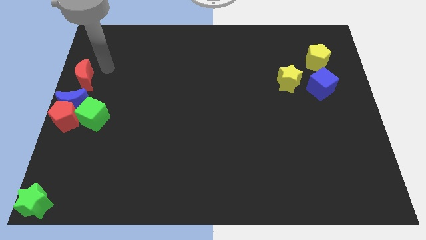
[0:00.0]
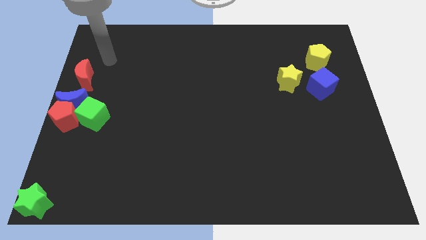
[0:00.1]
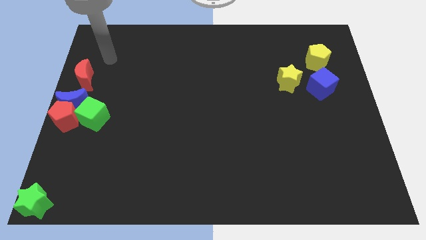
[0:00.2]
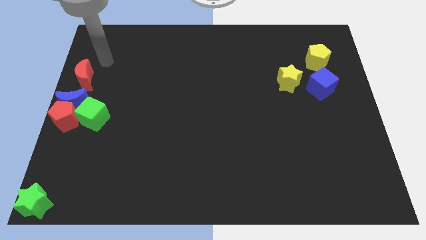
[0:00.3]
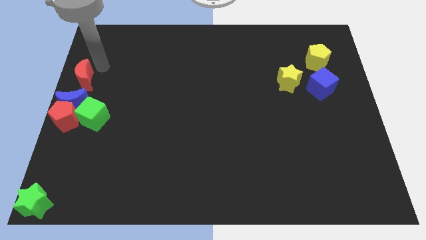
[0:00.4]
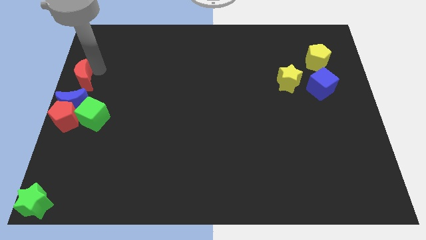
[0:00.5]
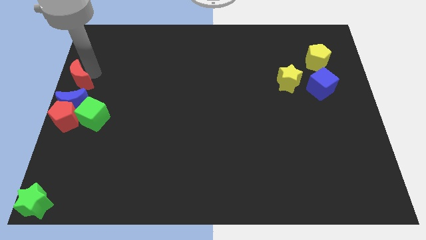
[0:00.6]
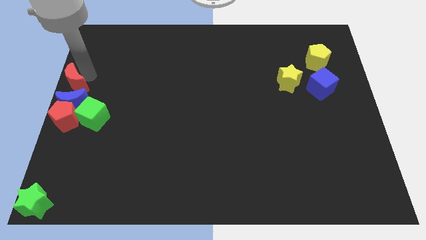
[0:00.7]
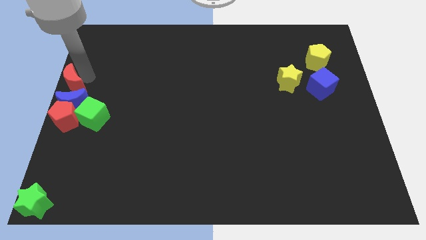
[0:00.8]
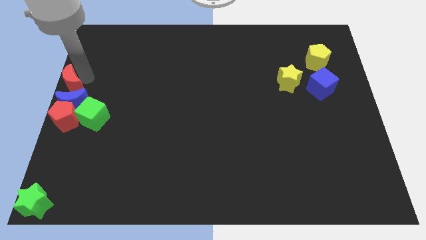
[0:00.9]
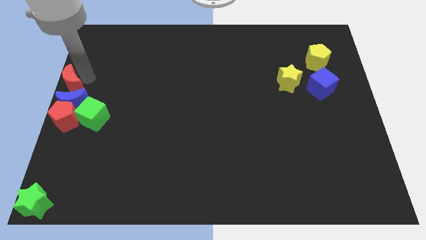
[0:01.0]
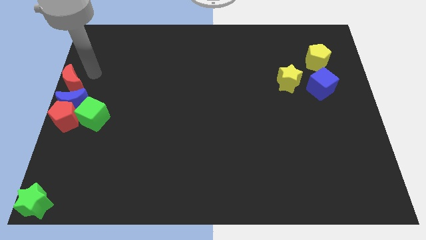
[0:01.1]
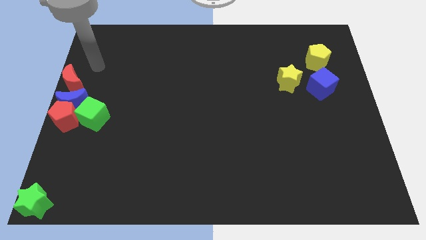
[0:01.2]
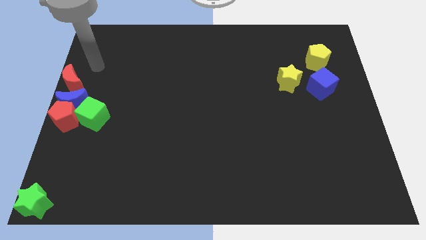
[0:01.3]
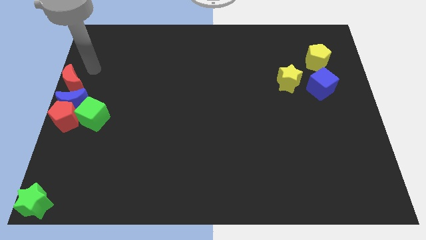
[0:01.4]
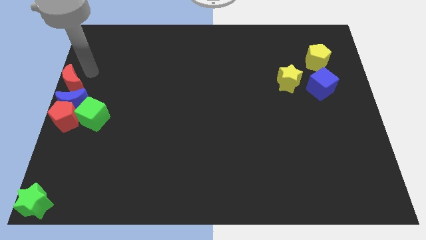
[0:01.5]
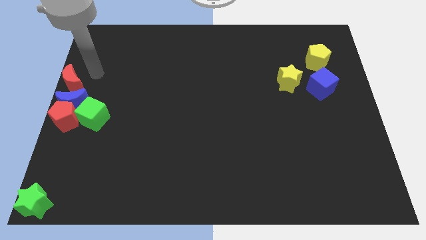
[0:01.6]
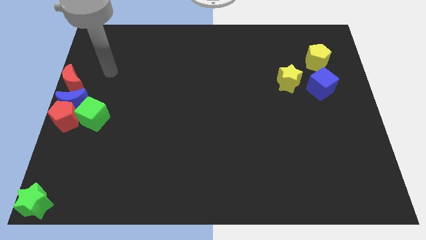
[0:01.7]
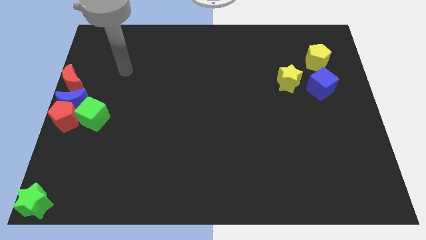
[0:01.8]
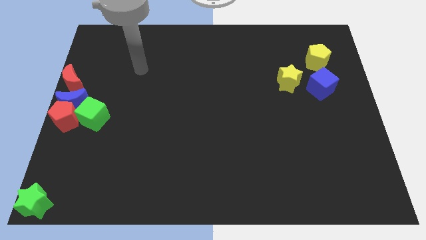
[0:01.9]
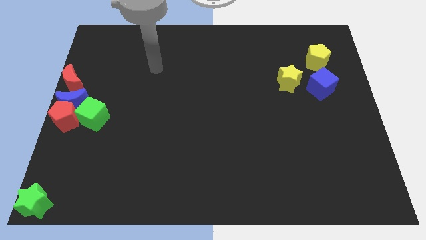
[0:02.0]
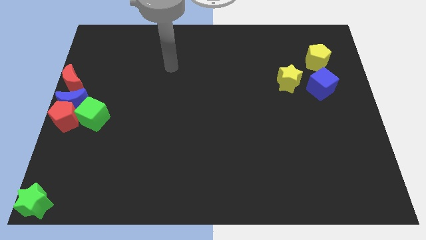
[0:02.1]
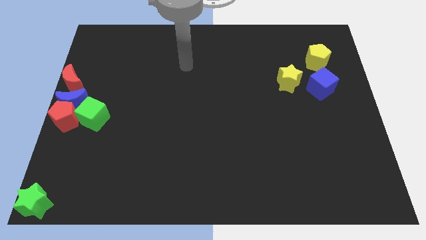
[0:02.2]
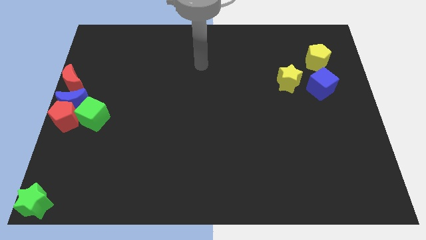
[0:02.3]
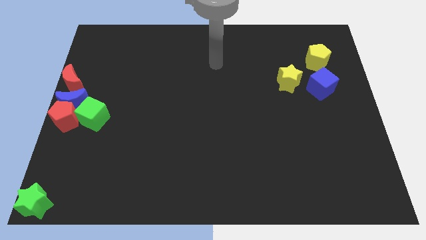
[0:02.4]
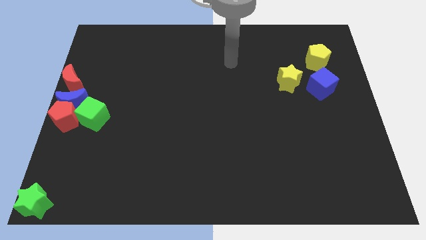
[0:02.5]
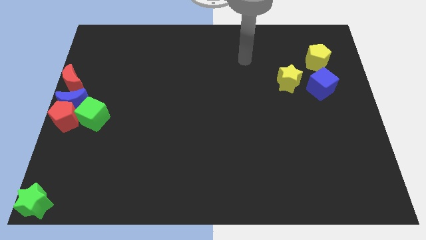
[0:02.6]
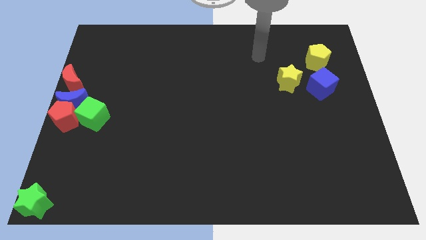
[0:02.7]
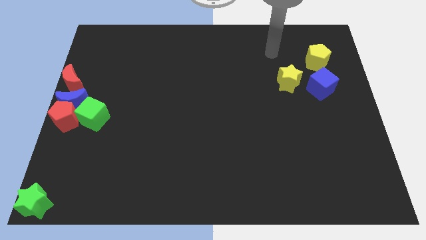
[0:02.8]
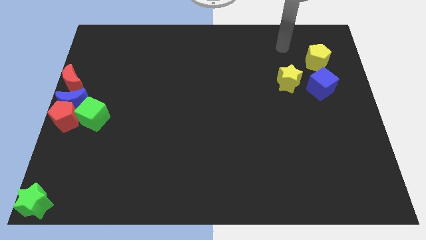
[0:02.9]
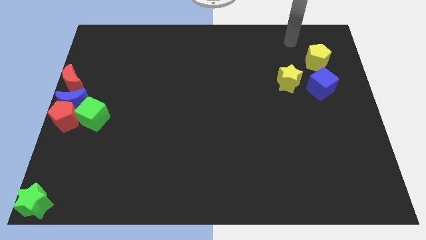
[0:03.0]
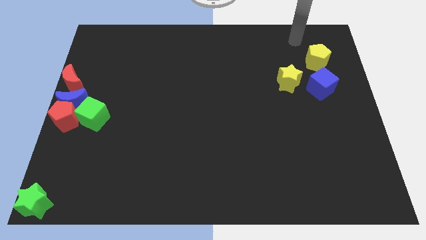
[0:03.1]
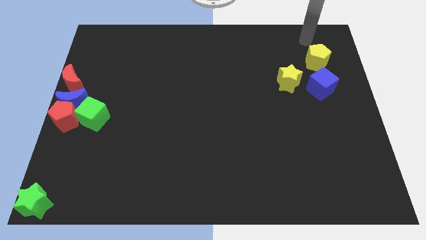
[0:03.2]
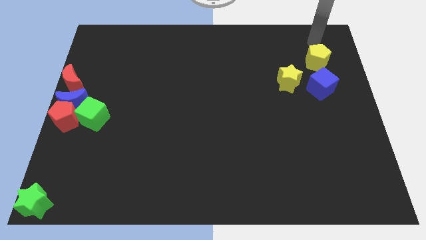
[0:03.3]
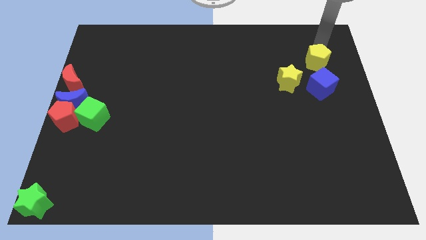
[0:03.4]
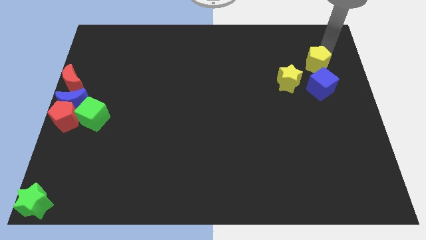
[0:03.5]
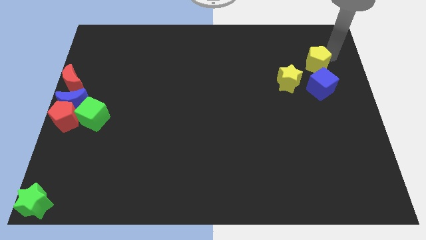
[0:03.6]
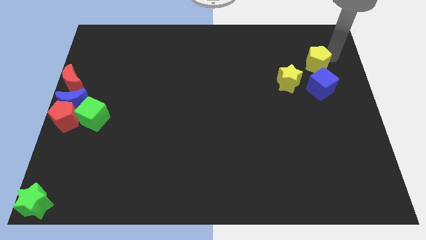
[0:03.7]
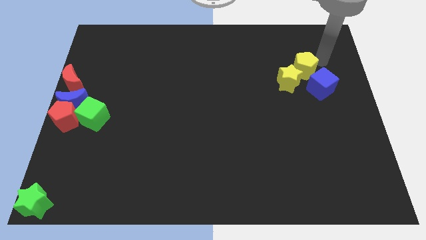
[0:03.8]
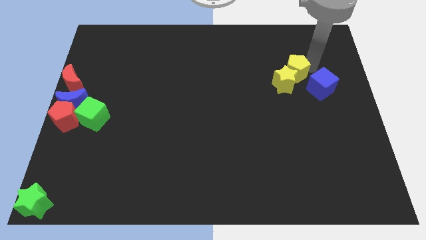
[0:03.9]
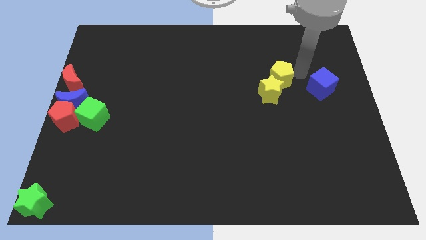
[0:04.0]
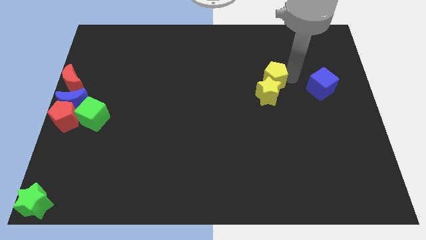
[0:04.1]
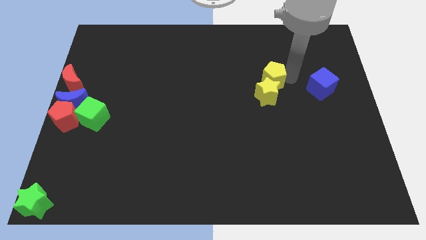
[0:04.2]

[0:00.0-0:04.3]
push the yellow pentagon to the top of the yellow star

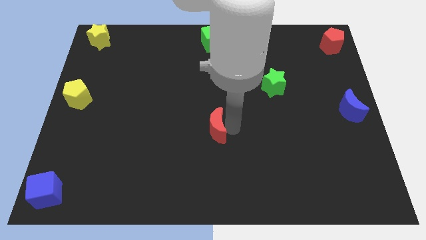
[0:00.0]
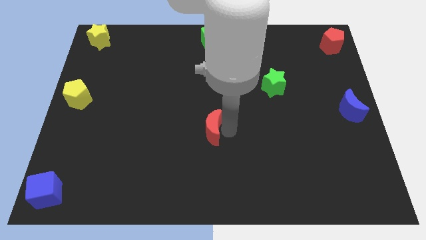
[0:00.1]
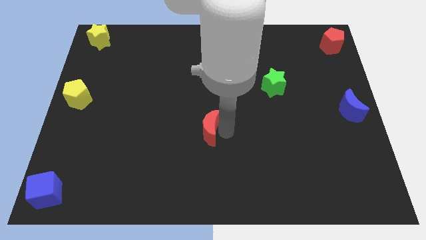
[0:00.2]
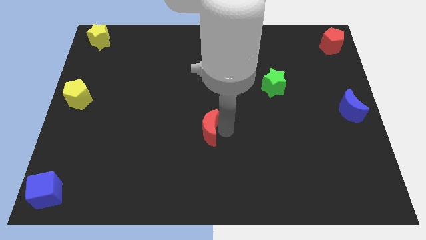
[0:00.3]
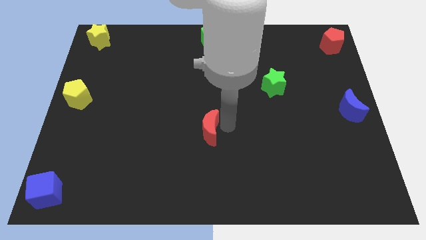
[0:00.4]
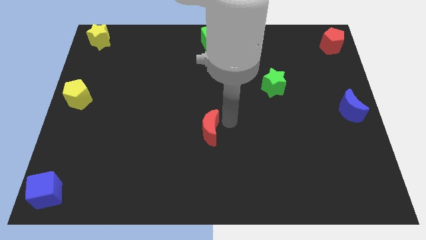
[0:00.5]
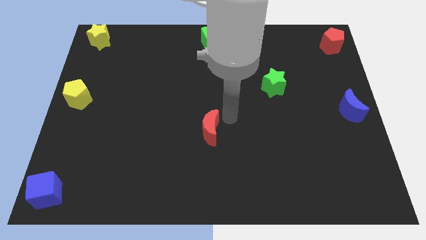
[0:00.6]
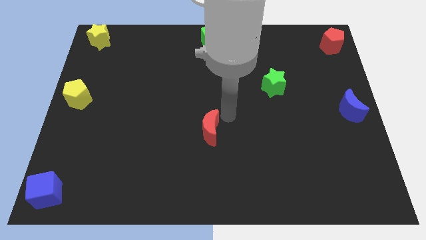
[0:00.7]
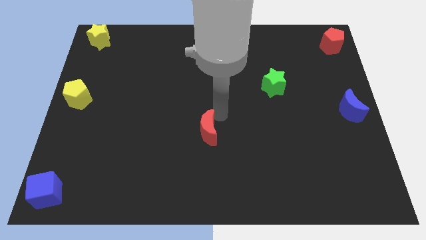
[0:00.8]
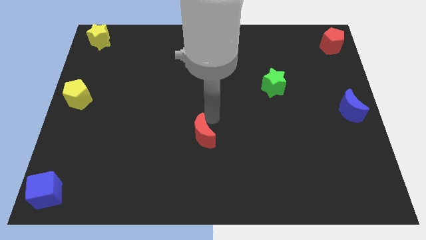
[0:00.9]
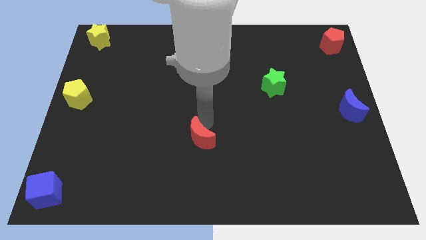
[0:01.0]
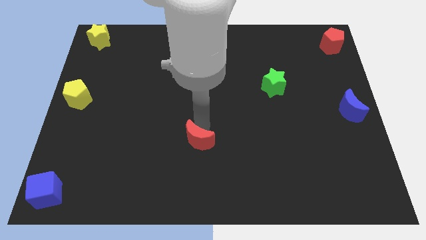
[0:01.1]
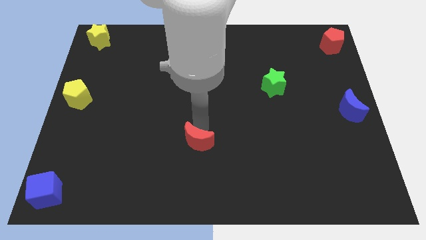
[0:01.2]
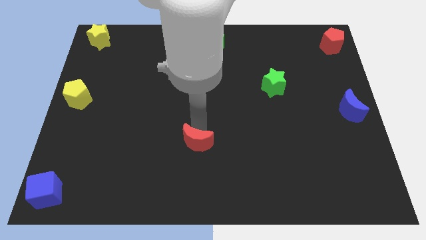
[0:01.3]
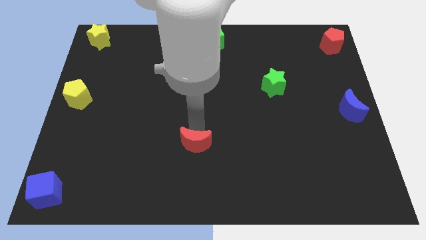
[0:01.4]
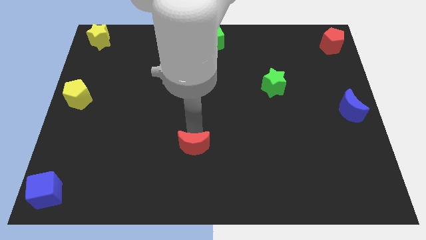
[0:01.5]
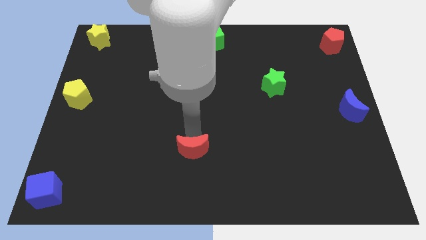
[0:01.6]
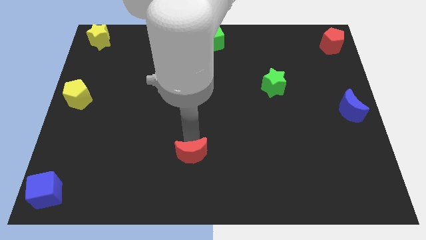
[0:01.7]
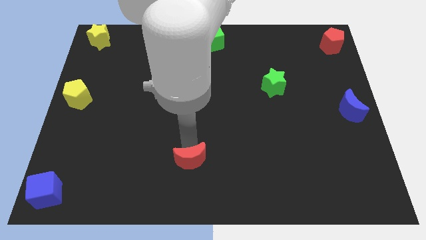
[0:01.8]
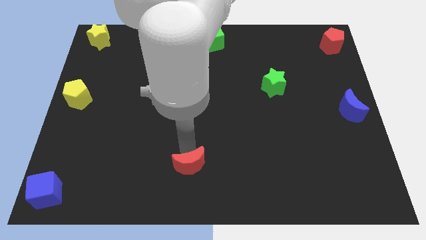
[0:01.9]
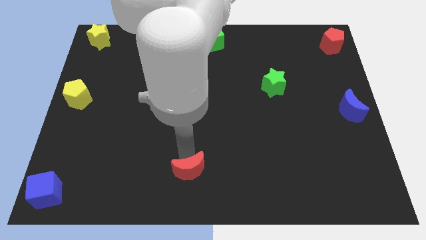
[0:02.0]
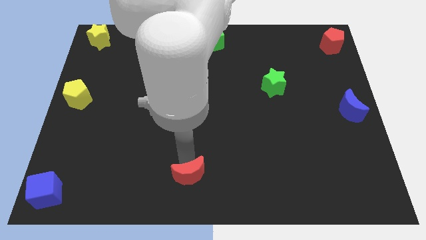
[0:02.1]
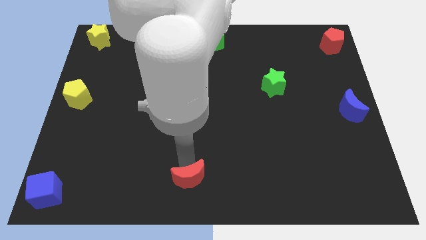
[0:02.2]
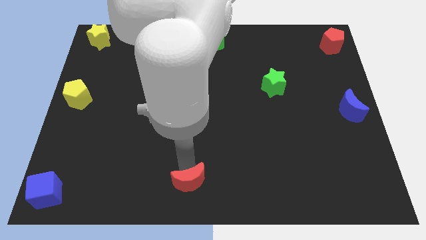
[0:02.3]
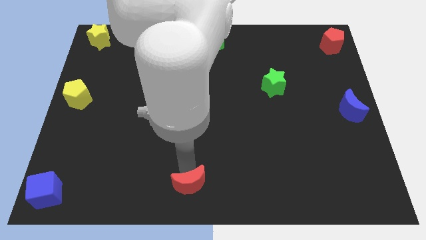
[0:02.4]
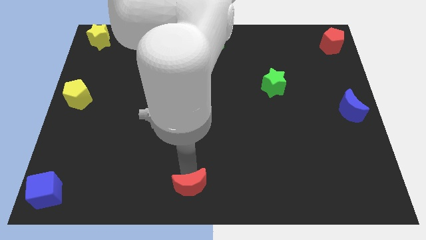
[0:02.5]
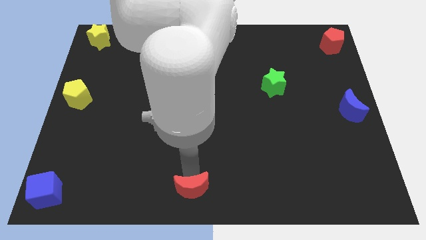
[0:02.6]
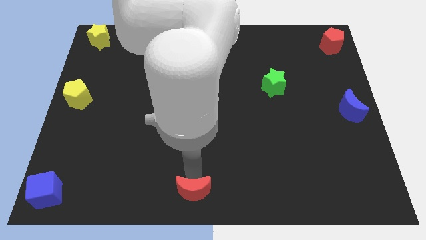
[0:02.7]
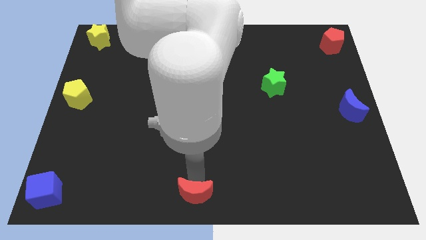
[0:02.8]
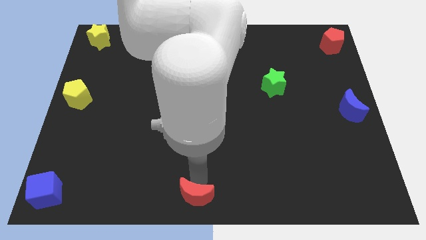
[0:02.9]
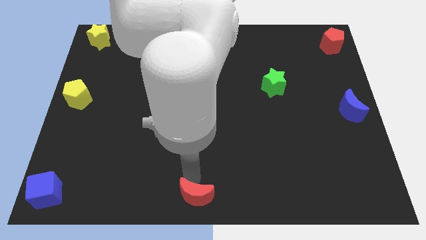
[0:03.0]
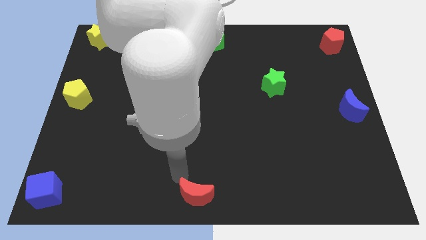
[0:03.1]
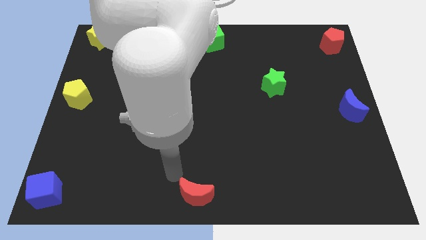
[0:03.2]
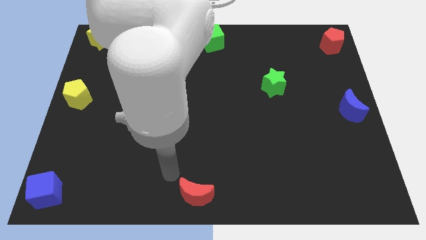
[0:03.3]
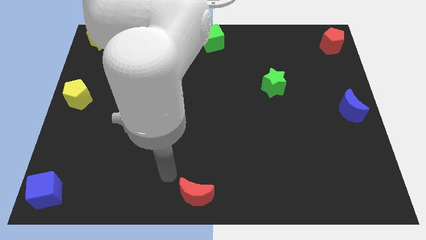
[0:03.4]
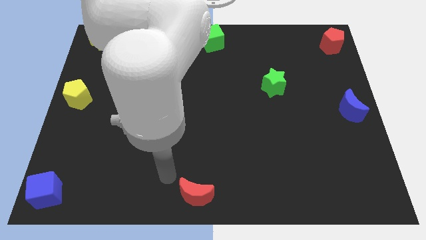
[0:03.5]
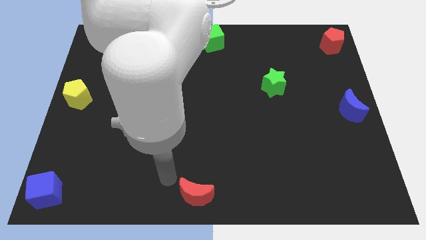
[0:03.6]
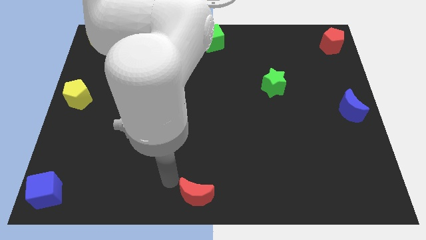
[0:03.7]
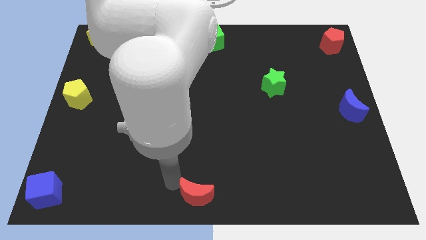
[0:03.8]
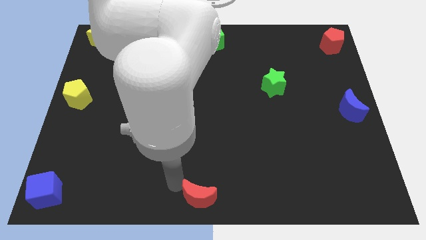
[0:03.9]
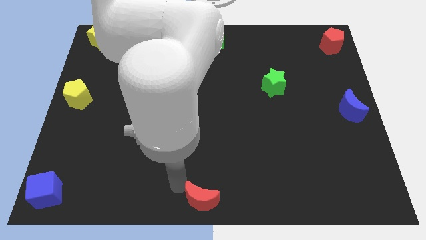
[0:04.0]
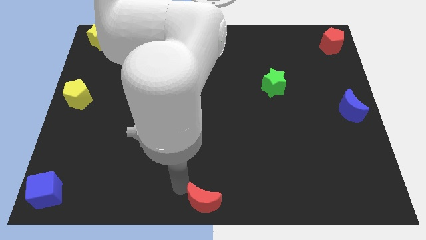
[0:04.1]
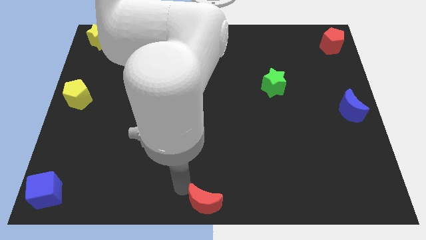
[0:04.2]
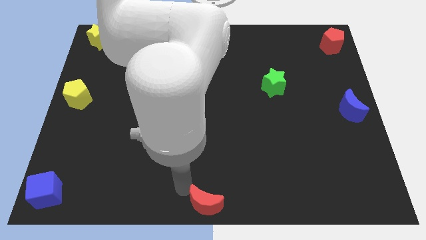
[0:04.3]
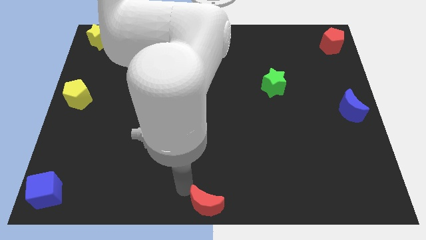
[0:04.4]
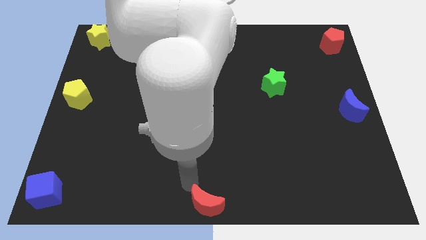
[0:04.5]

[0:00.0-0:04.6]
move the red crescent to the bottom center of the board

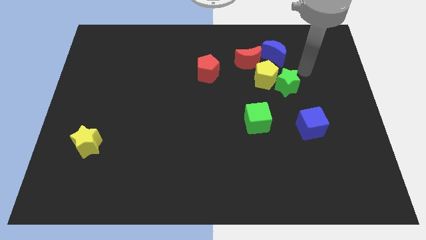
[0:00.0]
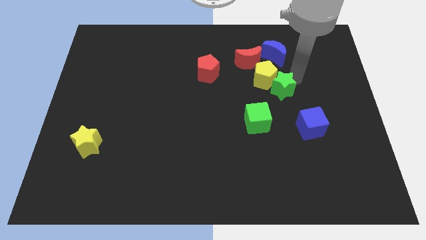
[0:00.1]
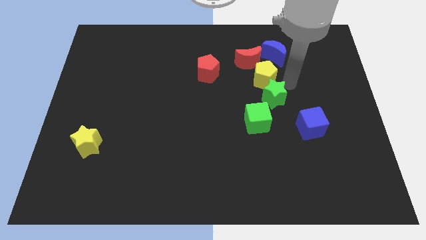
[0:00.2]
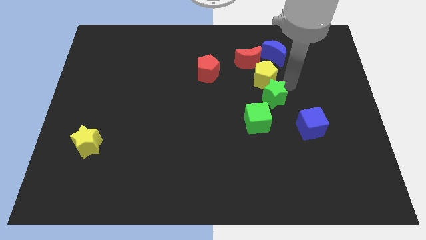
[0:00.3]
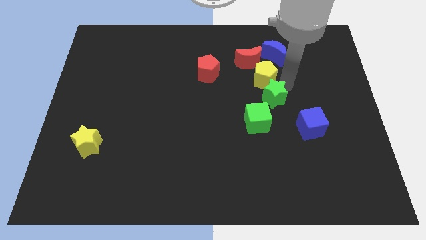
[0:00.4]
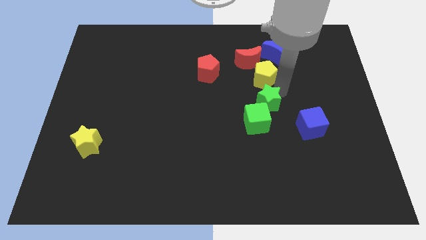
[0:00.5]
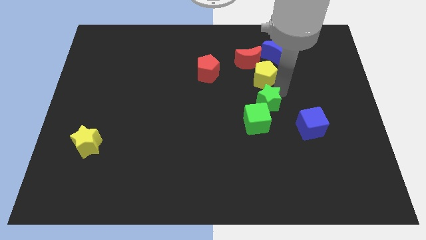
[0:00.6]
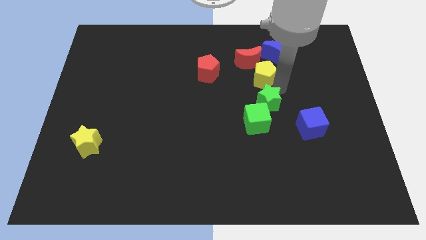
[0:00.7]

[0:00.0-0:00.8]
push the green star into the green cube
